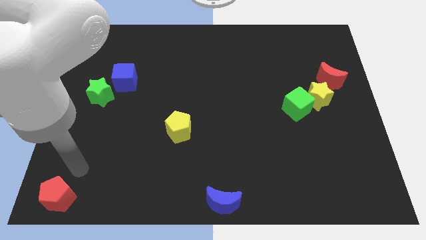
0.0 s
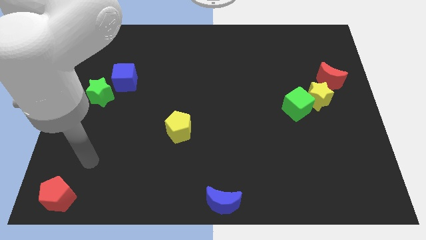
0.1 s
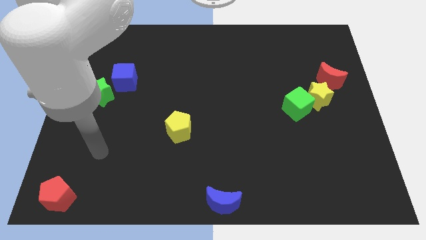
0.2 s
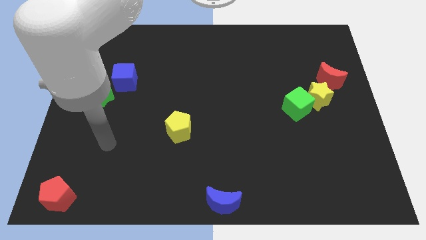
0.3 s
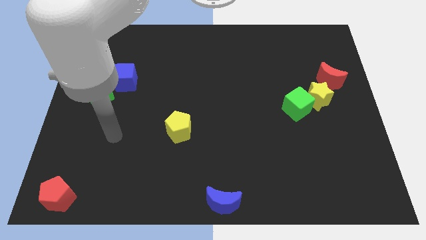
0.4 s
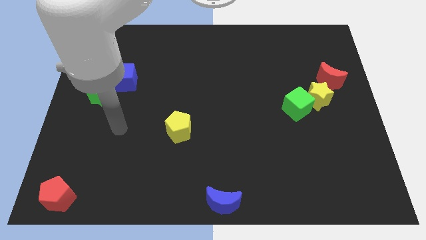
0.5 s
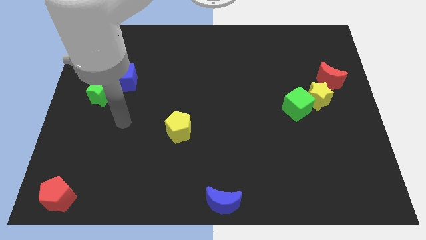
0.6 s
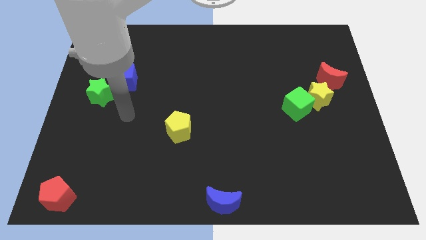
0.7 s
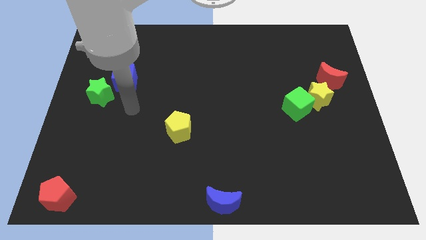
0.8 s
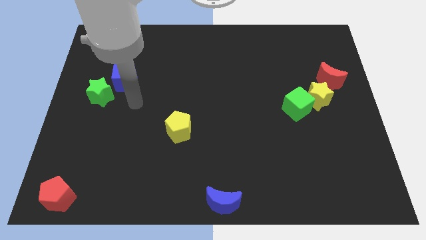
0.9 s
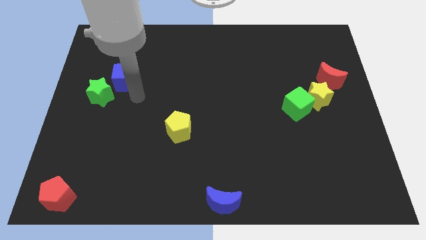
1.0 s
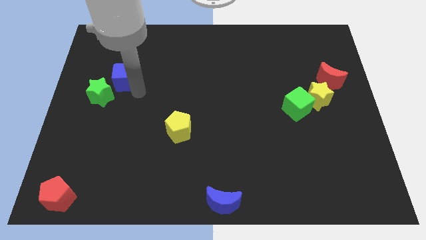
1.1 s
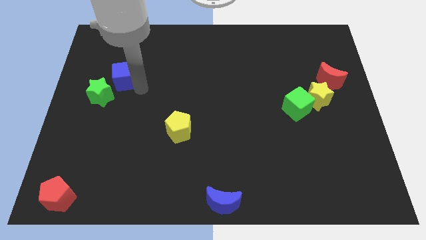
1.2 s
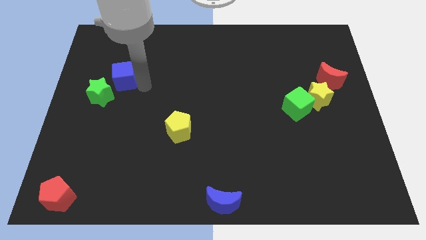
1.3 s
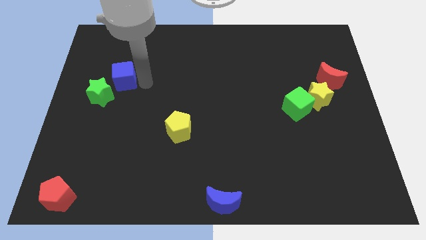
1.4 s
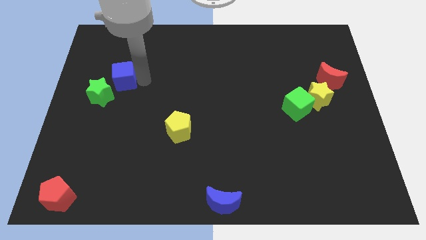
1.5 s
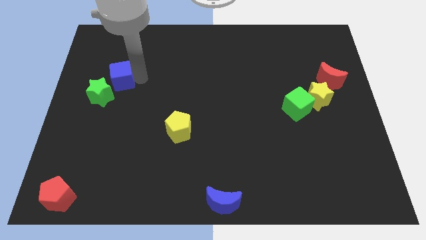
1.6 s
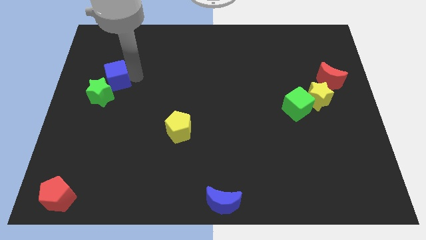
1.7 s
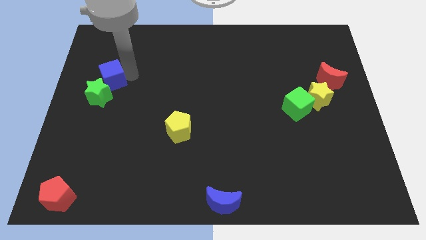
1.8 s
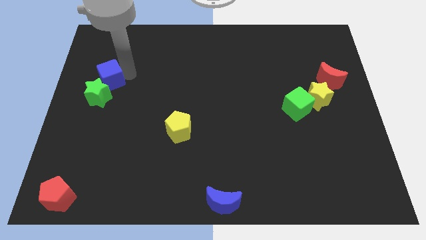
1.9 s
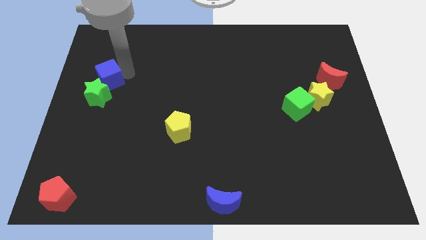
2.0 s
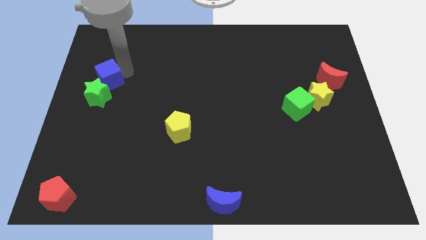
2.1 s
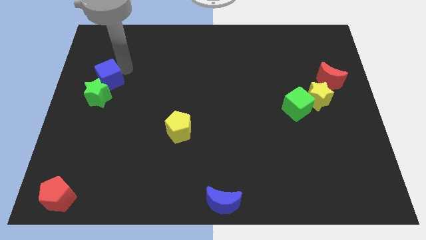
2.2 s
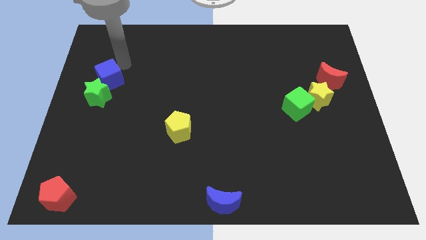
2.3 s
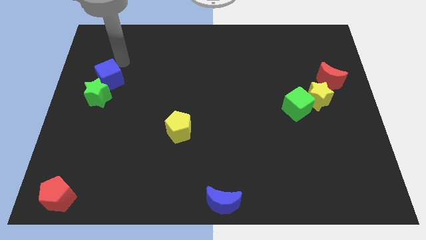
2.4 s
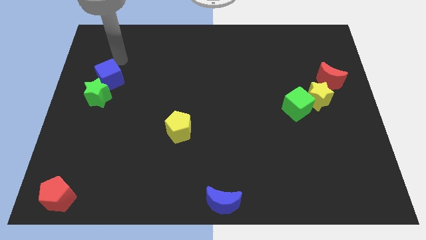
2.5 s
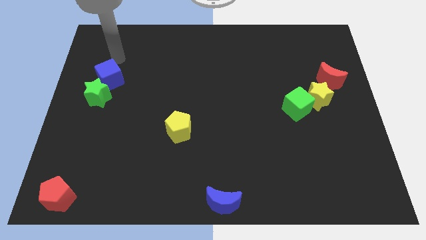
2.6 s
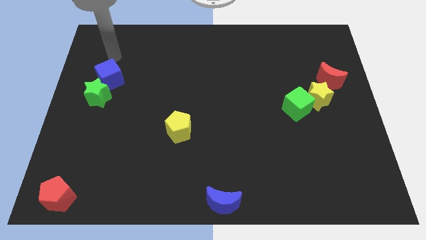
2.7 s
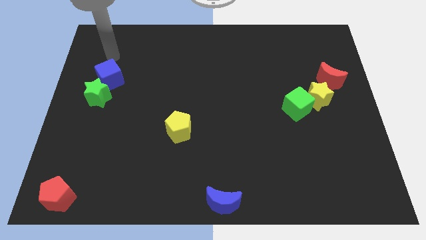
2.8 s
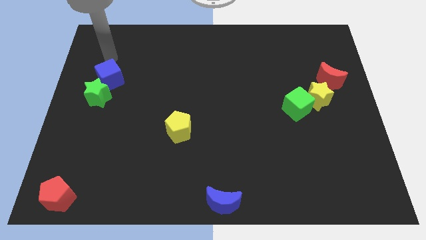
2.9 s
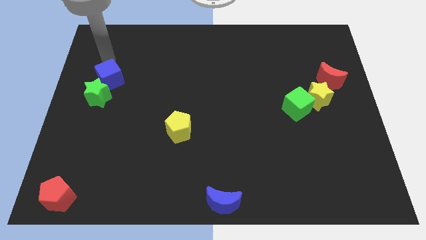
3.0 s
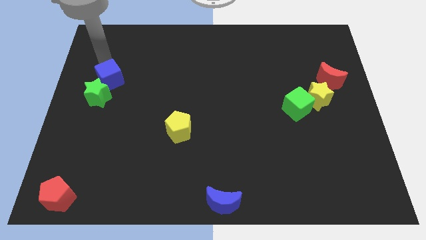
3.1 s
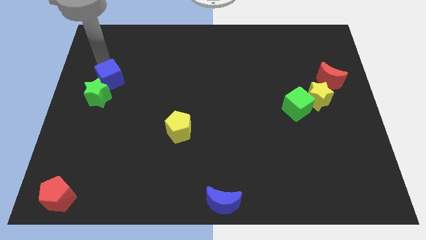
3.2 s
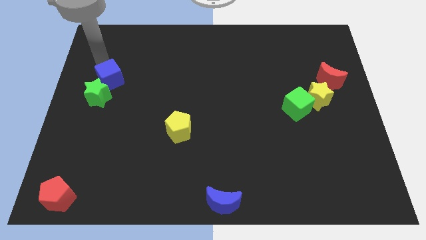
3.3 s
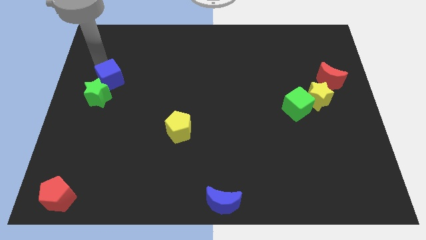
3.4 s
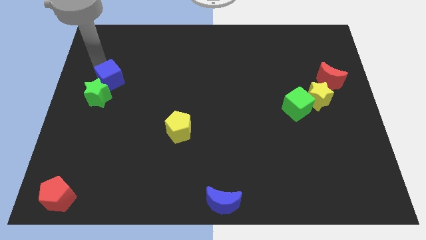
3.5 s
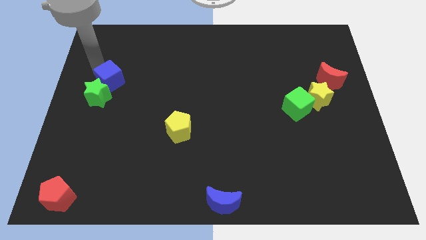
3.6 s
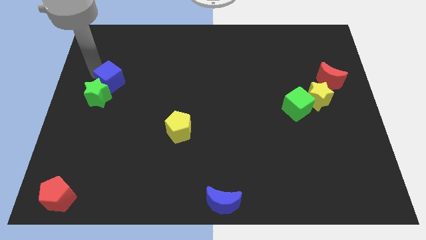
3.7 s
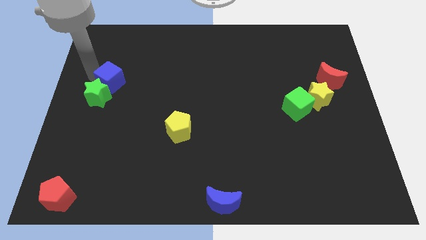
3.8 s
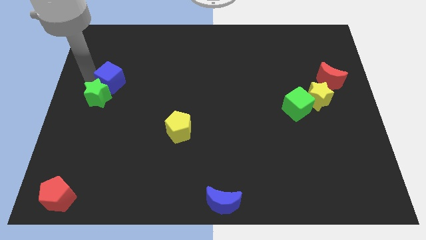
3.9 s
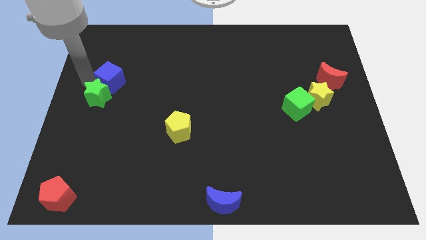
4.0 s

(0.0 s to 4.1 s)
place your arm in between green star and blue cube

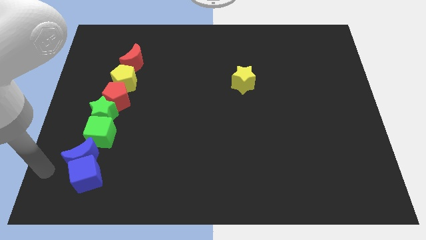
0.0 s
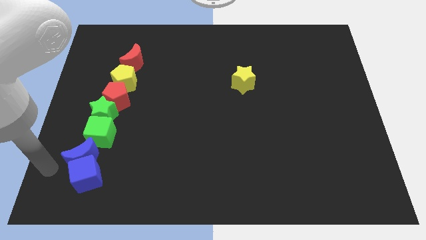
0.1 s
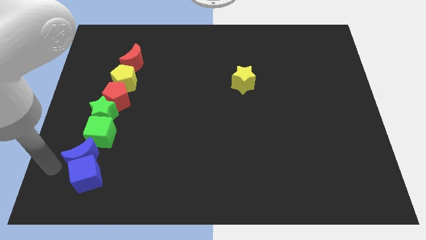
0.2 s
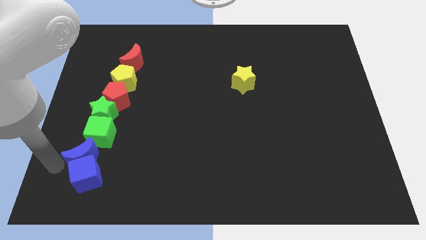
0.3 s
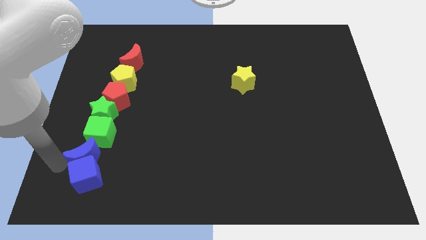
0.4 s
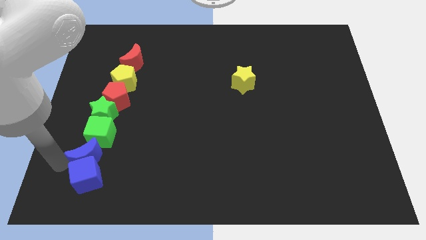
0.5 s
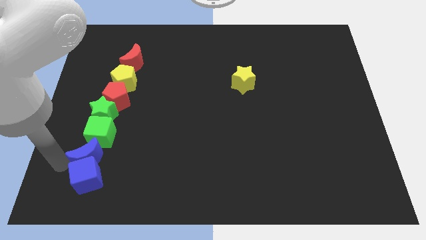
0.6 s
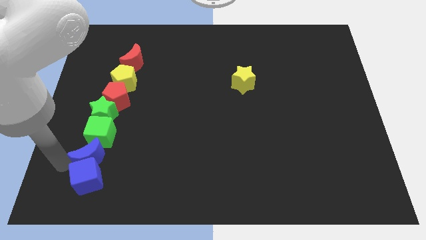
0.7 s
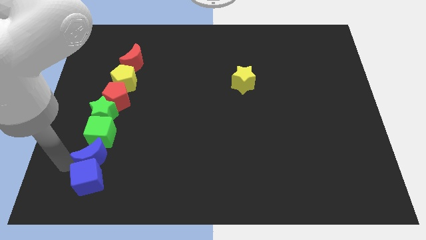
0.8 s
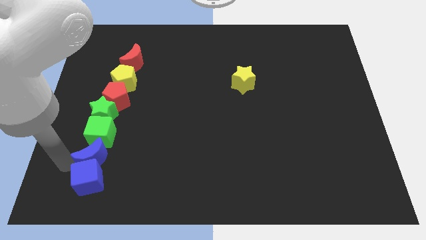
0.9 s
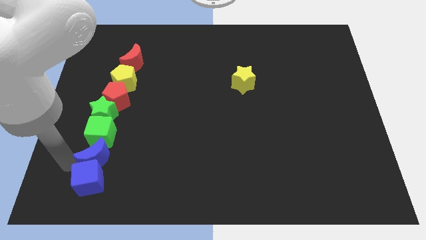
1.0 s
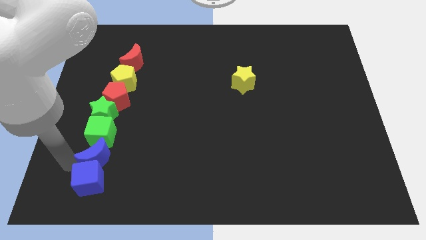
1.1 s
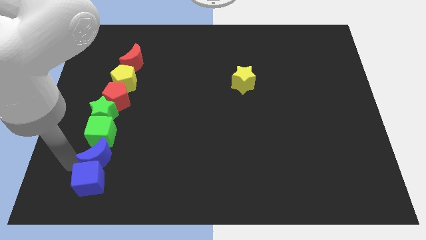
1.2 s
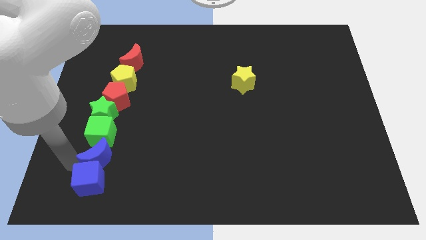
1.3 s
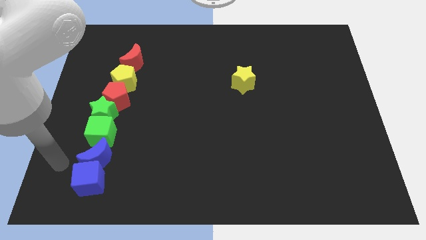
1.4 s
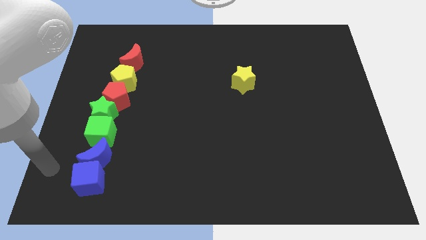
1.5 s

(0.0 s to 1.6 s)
move the blue moon towards slightly right of the board

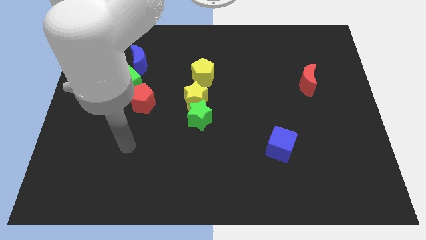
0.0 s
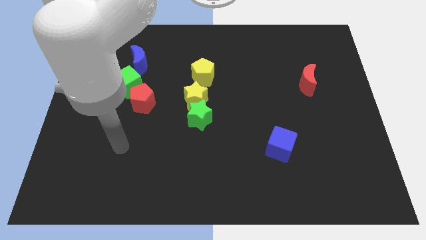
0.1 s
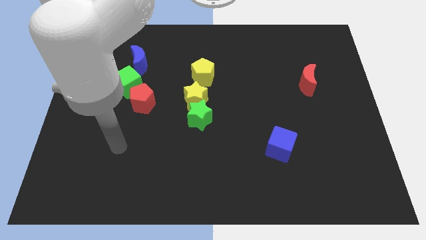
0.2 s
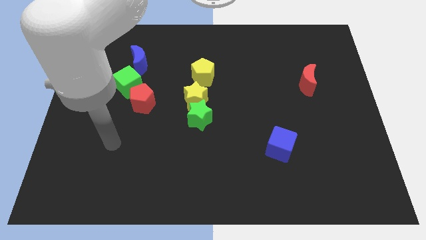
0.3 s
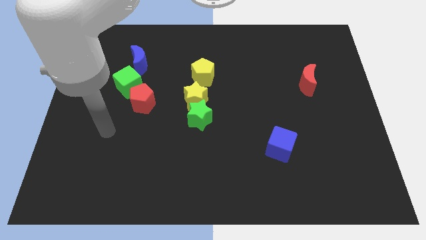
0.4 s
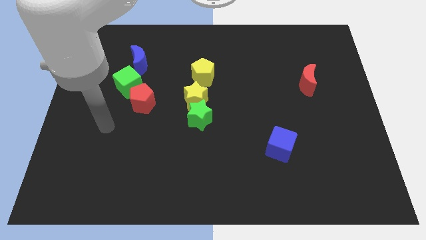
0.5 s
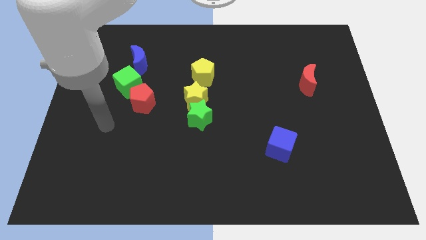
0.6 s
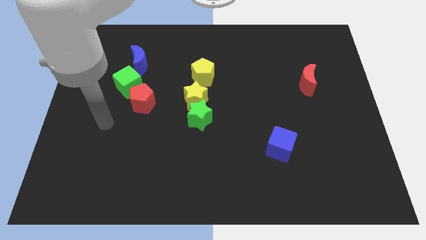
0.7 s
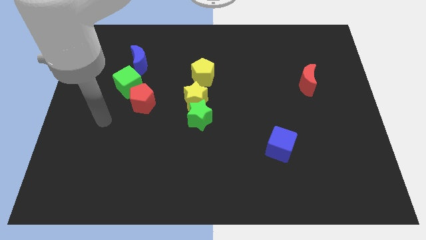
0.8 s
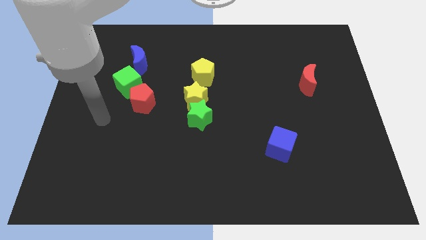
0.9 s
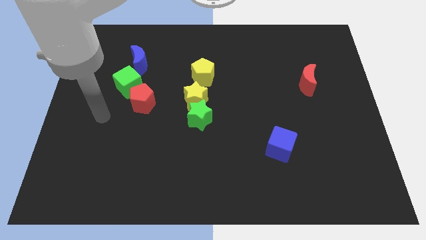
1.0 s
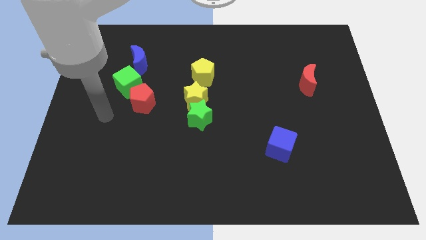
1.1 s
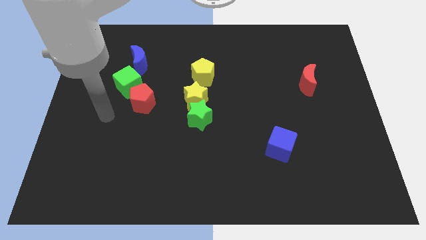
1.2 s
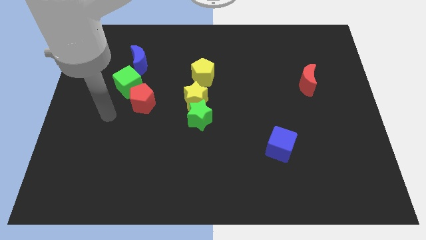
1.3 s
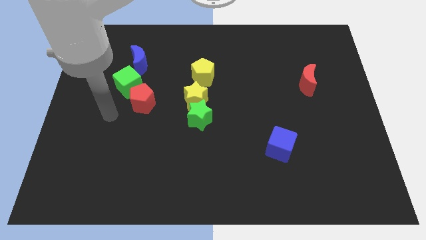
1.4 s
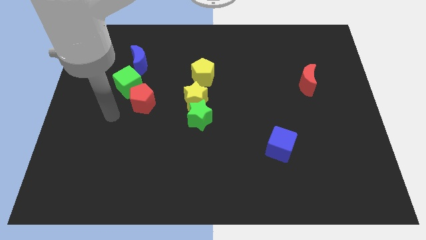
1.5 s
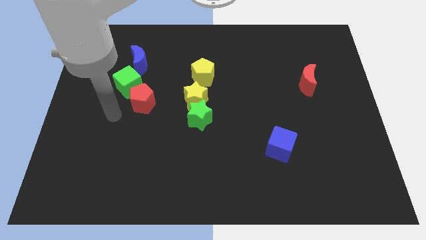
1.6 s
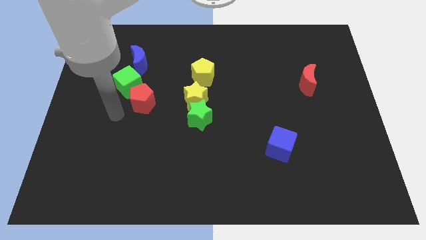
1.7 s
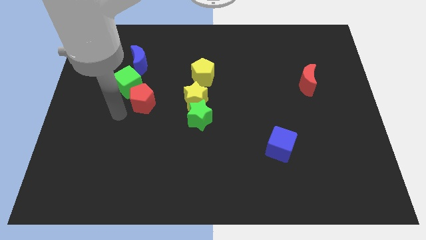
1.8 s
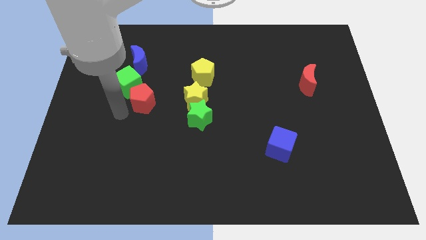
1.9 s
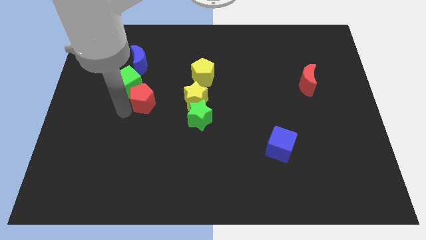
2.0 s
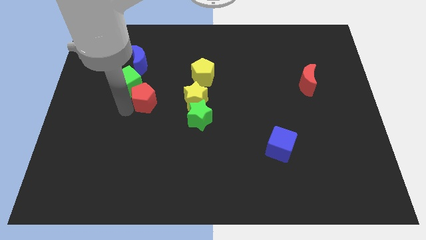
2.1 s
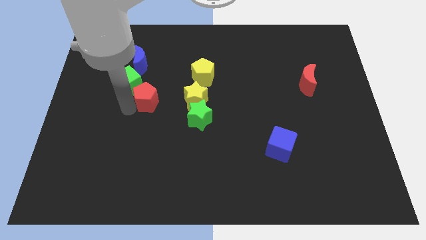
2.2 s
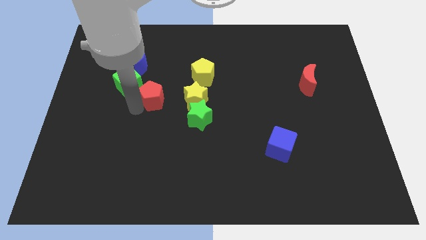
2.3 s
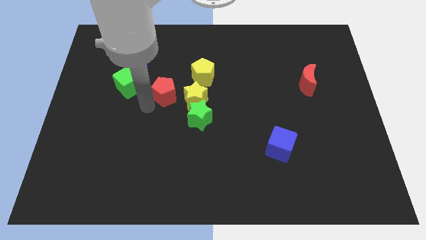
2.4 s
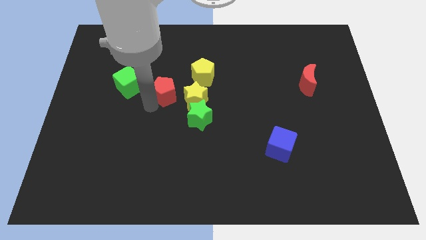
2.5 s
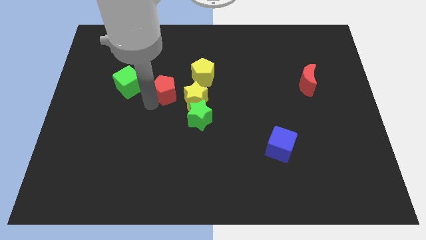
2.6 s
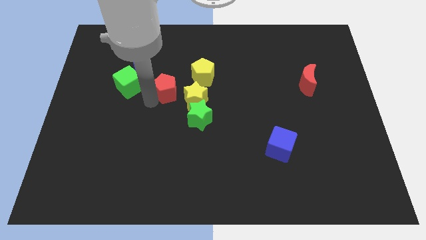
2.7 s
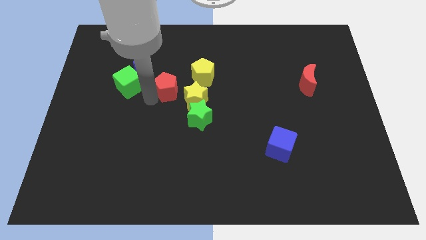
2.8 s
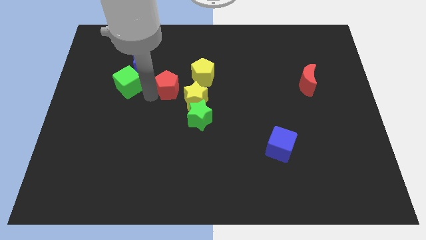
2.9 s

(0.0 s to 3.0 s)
push the red pentagon to the right of the green cube

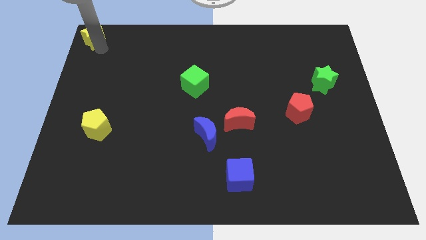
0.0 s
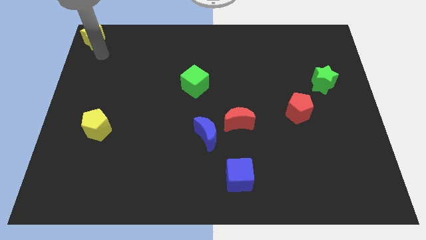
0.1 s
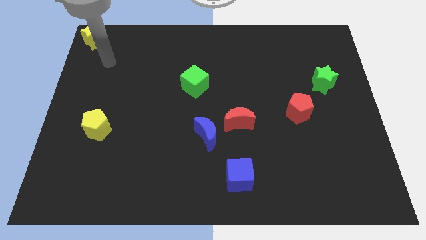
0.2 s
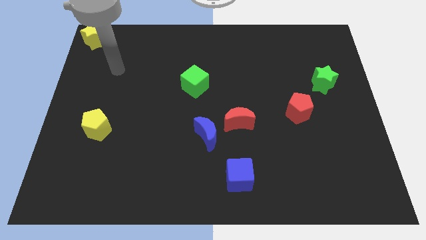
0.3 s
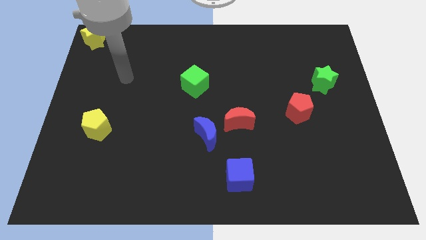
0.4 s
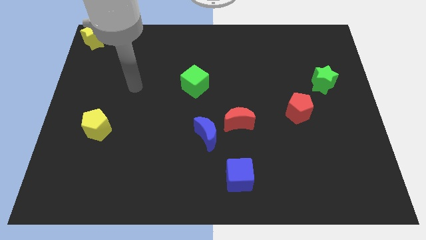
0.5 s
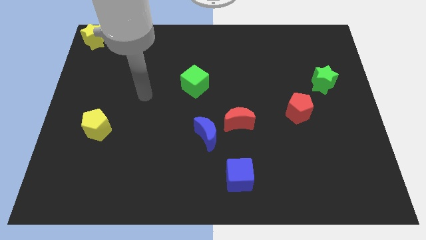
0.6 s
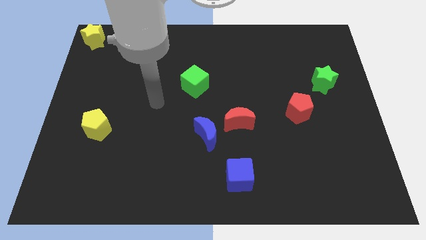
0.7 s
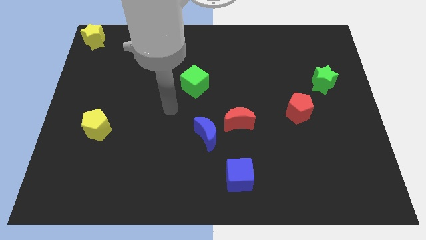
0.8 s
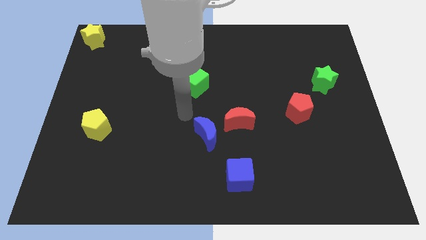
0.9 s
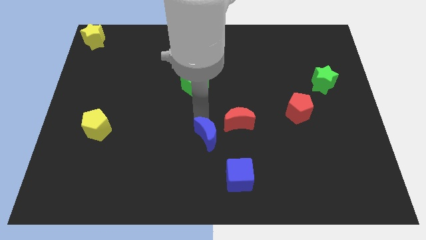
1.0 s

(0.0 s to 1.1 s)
point the arm above the blue crescent
